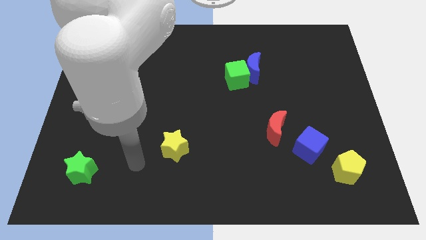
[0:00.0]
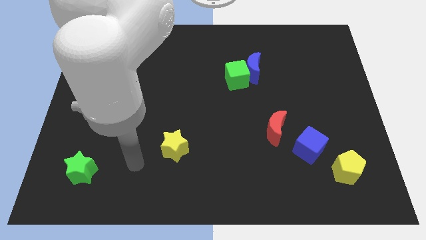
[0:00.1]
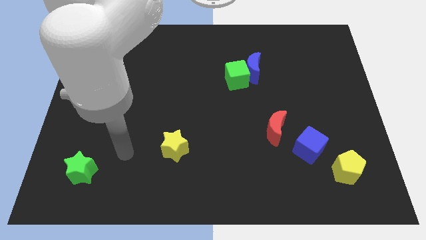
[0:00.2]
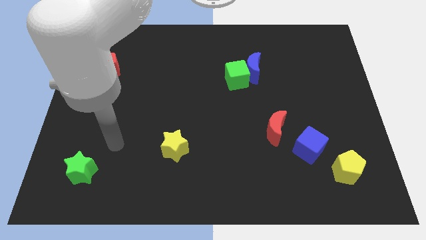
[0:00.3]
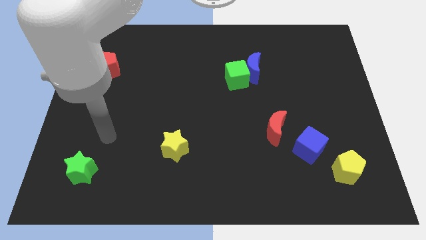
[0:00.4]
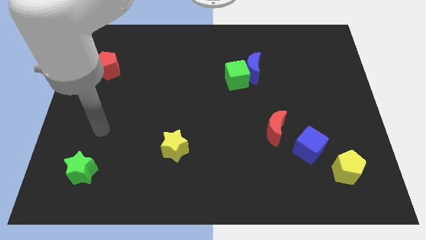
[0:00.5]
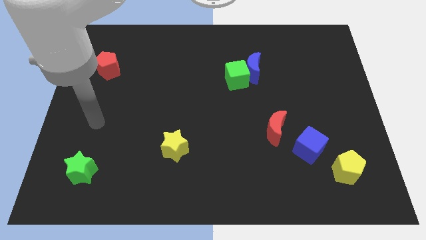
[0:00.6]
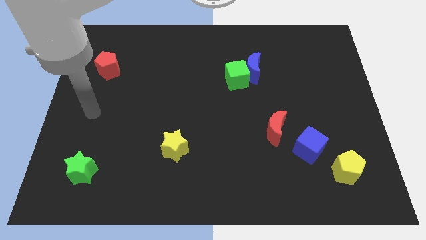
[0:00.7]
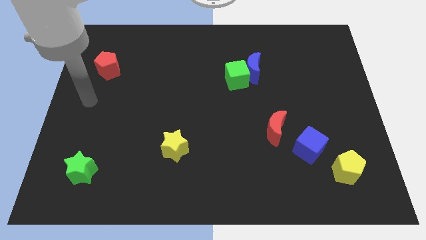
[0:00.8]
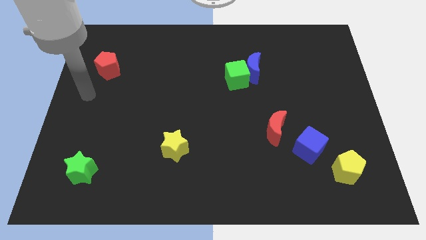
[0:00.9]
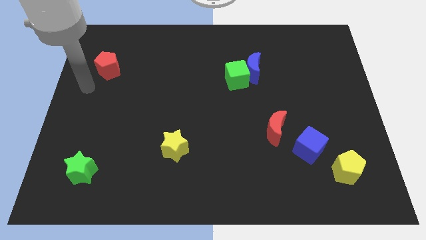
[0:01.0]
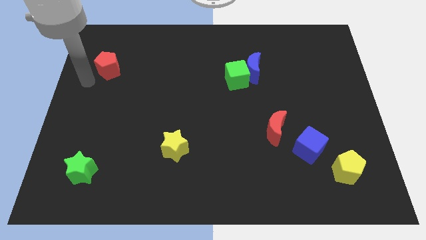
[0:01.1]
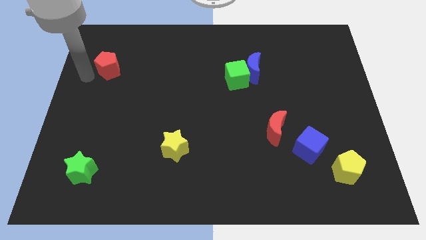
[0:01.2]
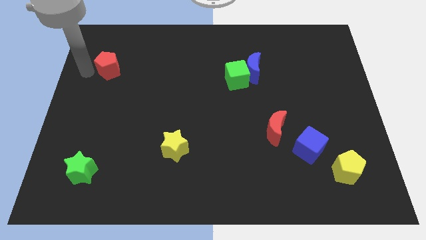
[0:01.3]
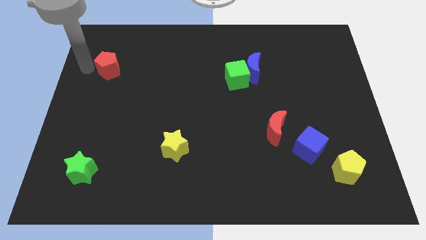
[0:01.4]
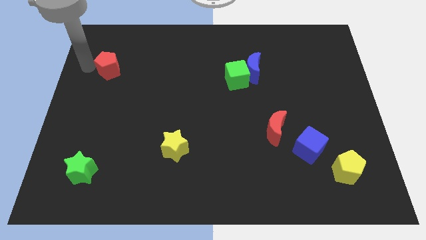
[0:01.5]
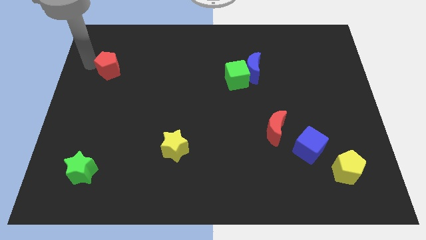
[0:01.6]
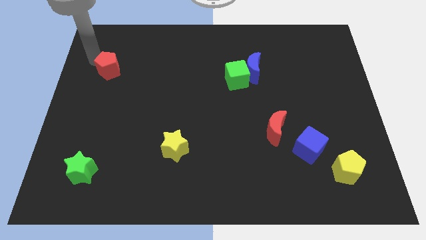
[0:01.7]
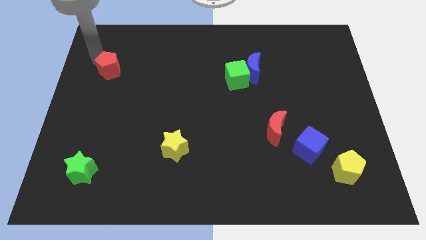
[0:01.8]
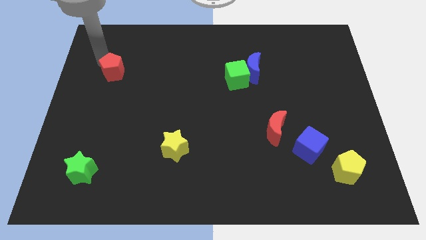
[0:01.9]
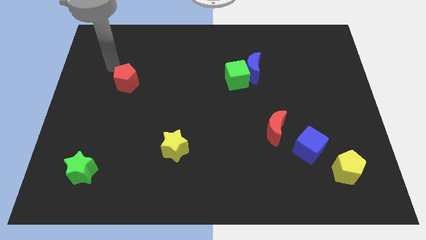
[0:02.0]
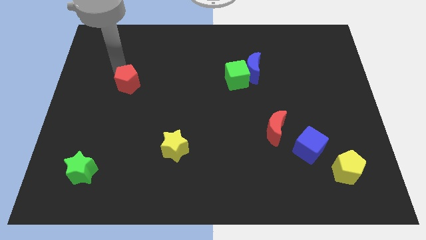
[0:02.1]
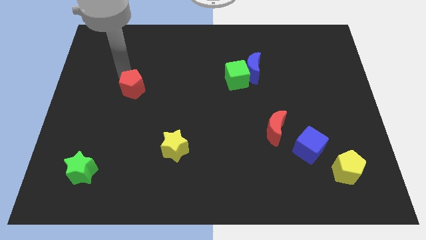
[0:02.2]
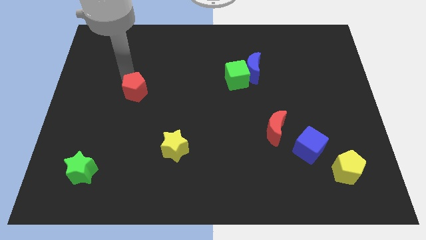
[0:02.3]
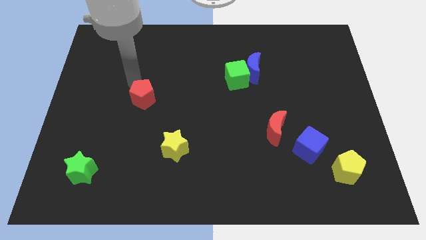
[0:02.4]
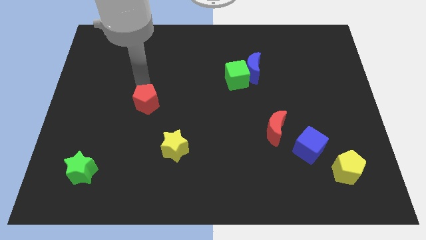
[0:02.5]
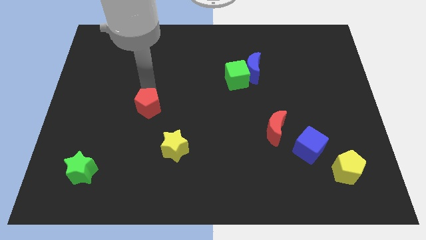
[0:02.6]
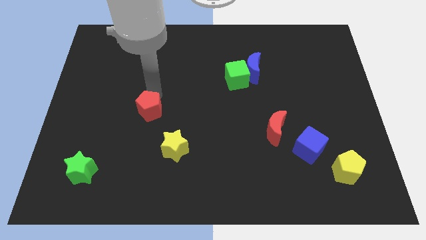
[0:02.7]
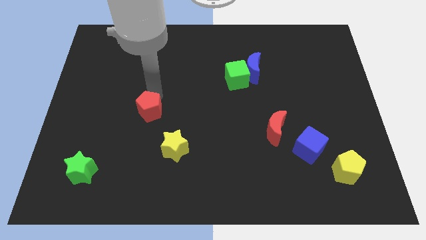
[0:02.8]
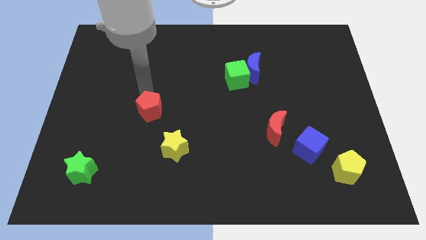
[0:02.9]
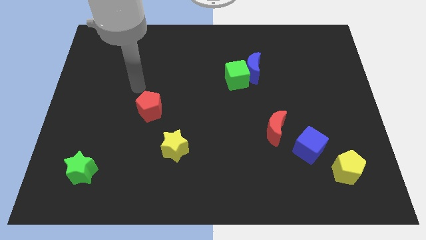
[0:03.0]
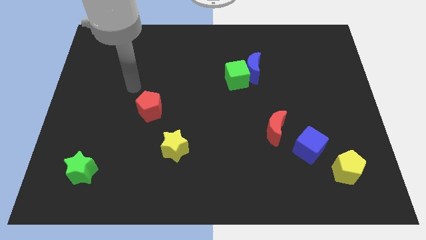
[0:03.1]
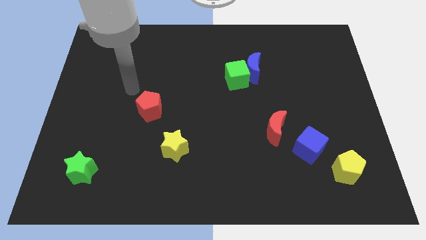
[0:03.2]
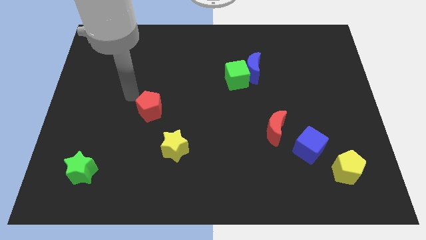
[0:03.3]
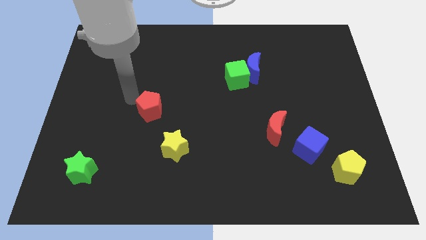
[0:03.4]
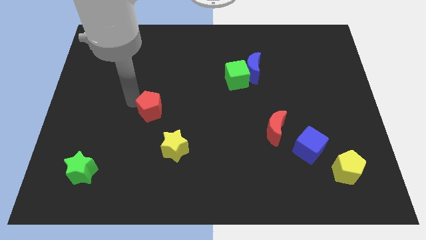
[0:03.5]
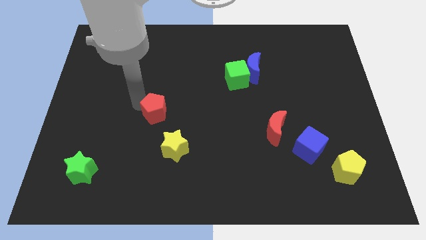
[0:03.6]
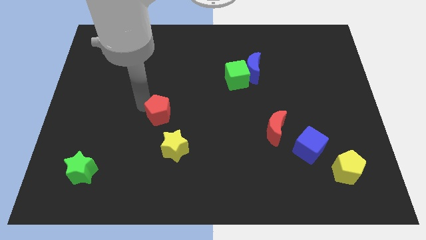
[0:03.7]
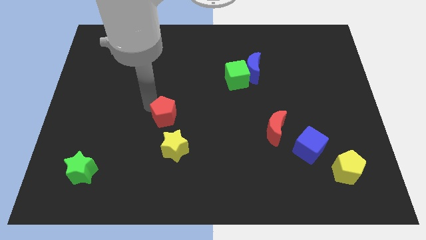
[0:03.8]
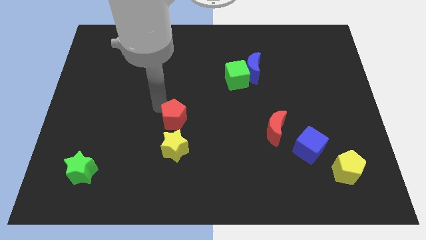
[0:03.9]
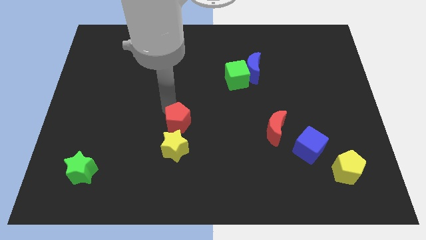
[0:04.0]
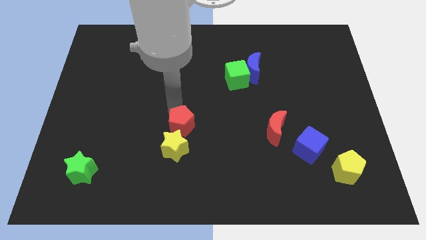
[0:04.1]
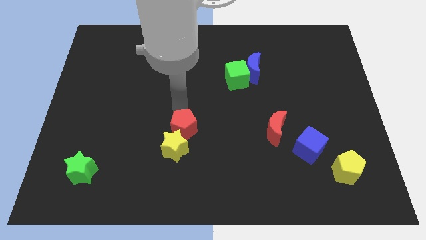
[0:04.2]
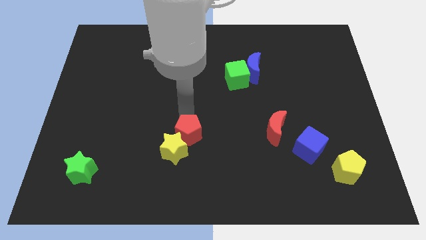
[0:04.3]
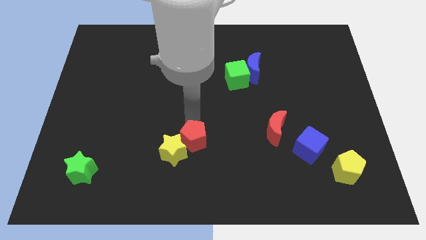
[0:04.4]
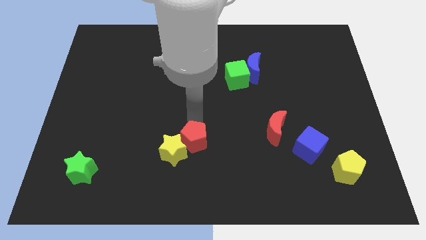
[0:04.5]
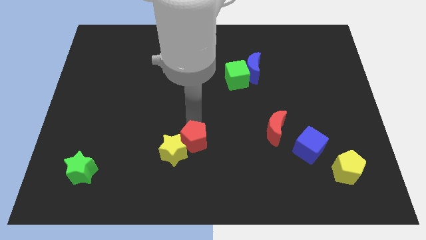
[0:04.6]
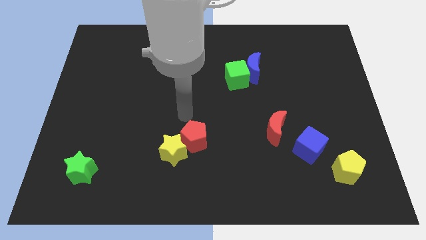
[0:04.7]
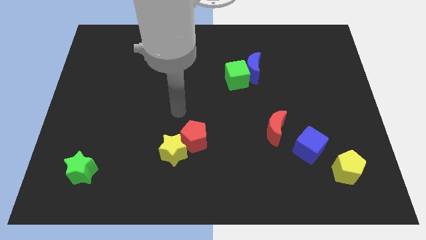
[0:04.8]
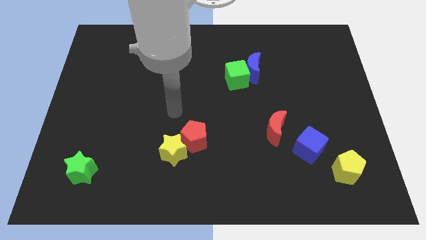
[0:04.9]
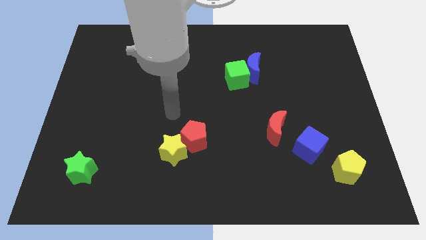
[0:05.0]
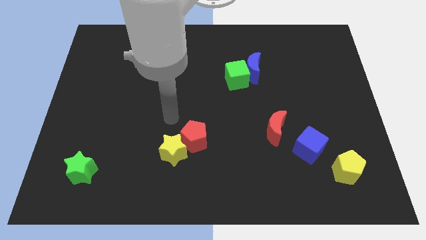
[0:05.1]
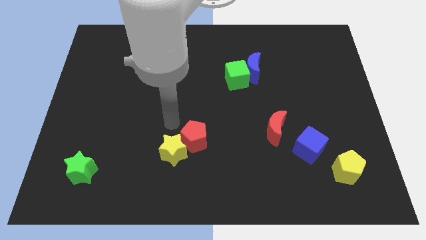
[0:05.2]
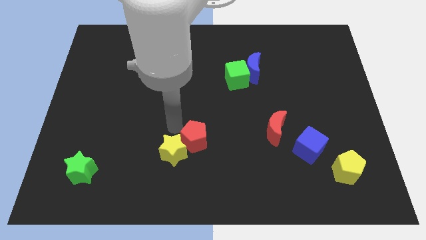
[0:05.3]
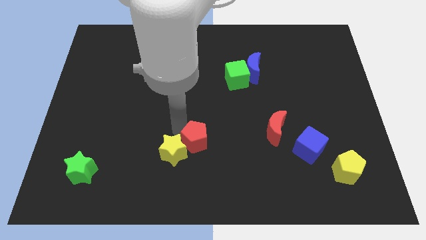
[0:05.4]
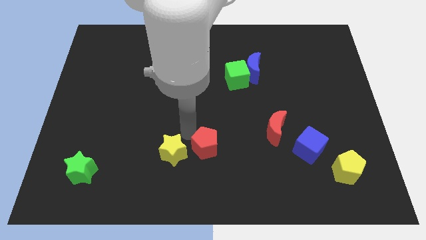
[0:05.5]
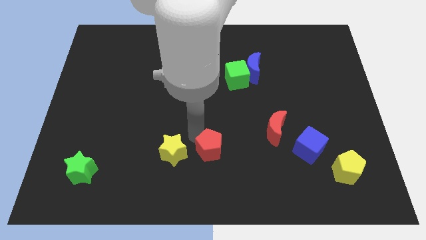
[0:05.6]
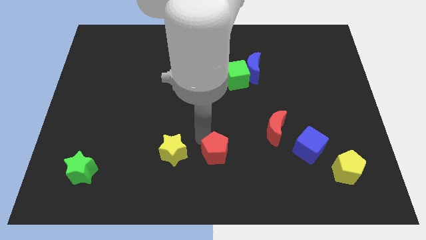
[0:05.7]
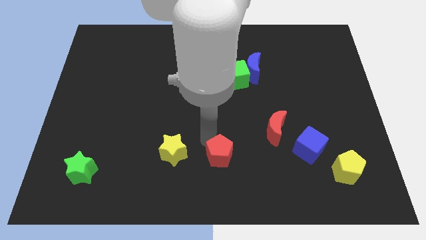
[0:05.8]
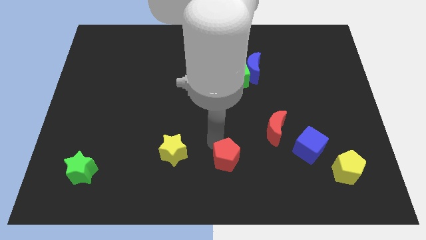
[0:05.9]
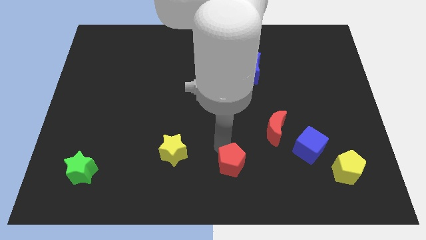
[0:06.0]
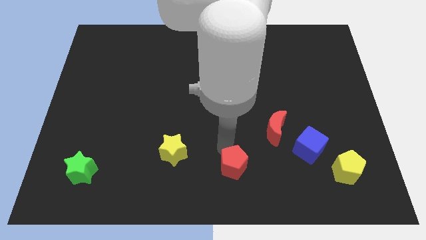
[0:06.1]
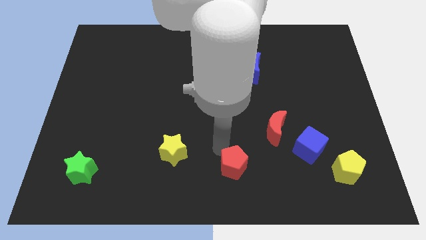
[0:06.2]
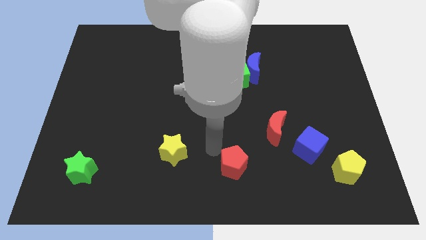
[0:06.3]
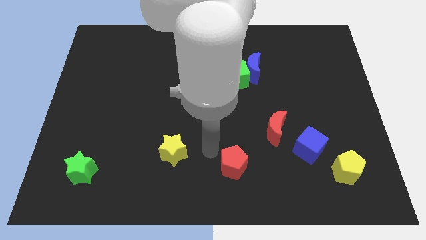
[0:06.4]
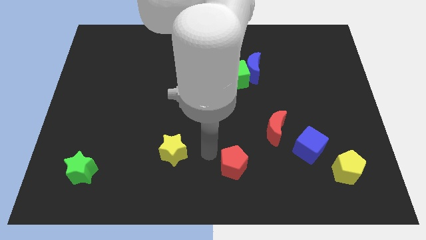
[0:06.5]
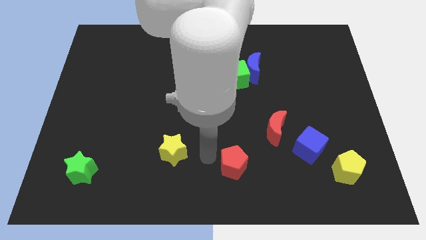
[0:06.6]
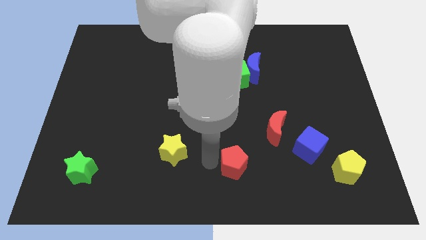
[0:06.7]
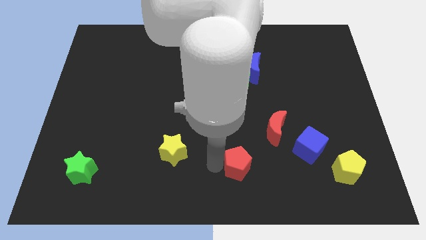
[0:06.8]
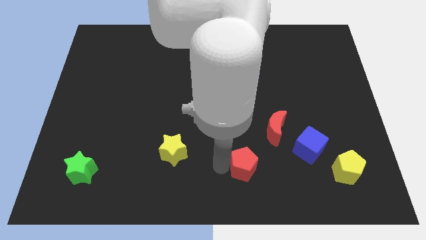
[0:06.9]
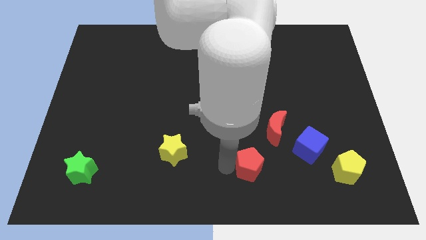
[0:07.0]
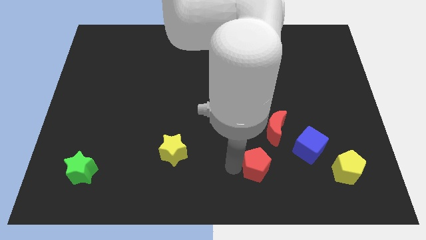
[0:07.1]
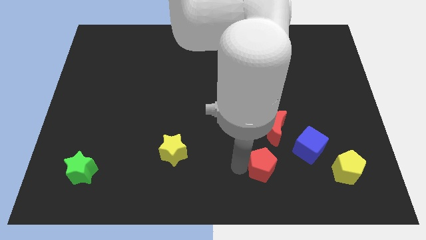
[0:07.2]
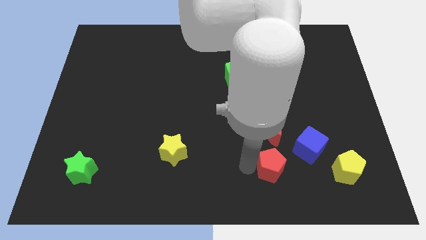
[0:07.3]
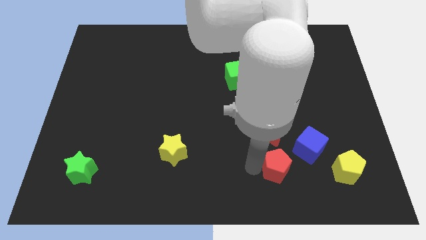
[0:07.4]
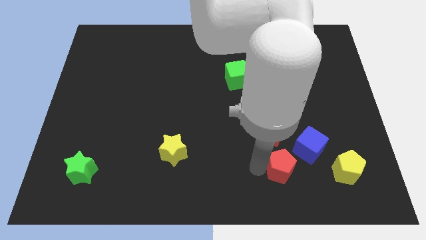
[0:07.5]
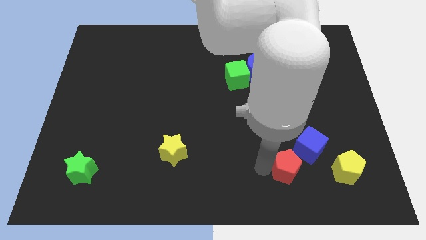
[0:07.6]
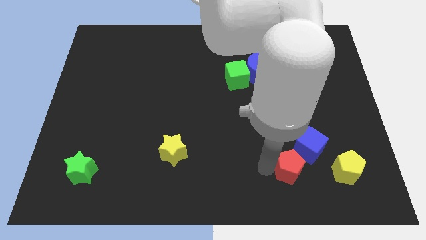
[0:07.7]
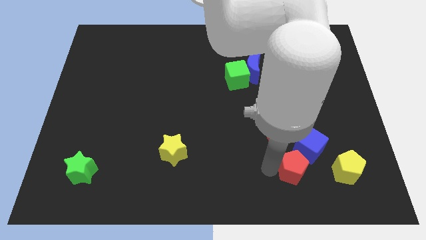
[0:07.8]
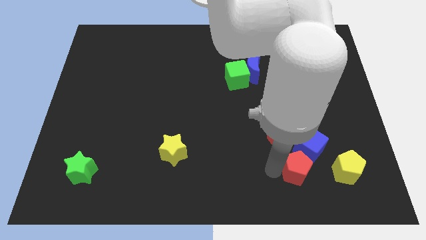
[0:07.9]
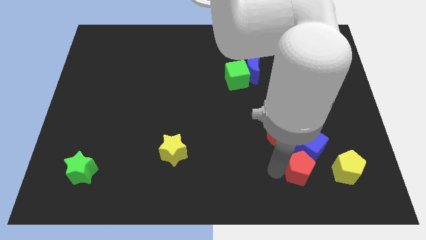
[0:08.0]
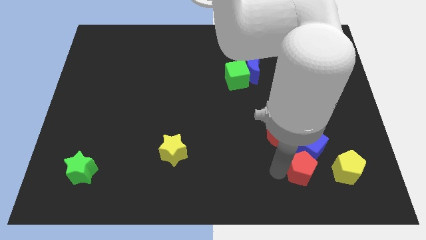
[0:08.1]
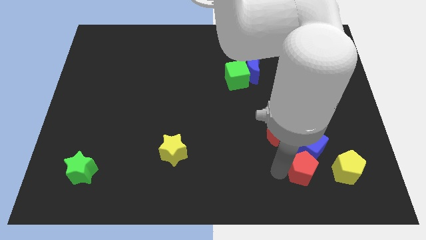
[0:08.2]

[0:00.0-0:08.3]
slide the red pentagon towards the blue cube

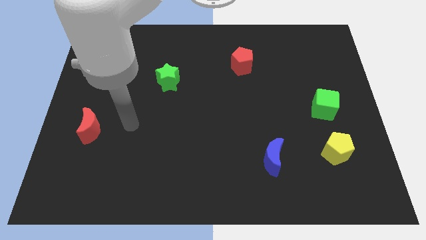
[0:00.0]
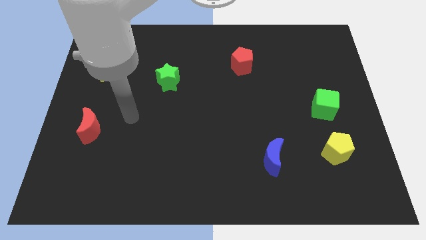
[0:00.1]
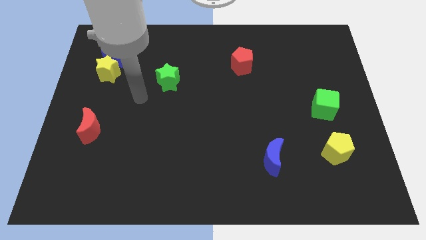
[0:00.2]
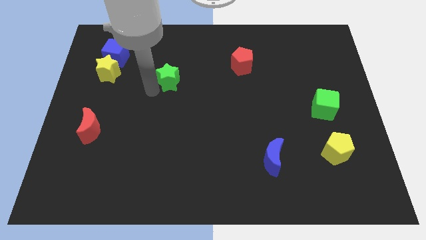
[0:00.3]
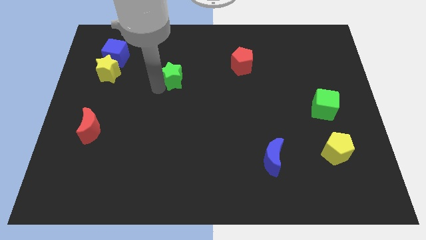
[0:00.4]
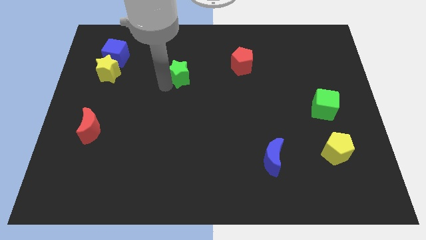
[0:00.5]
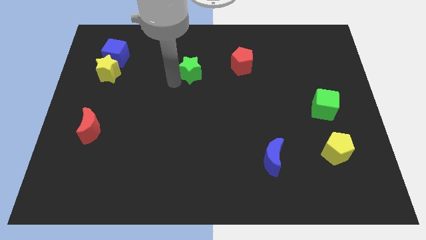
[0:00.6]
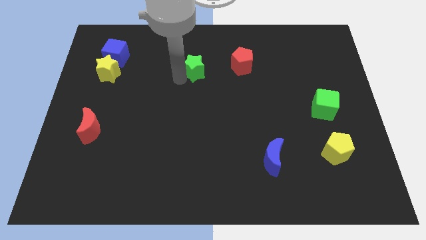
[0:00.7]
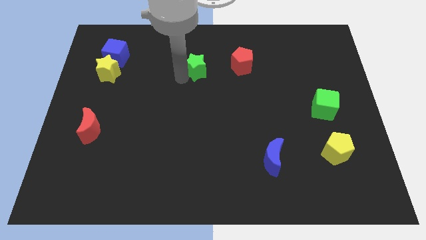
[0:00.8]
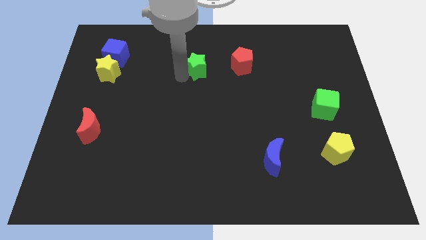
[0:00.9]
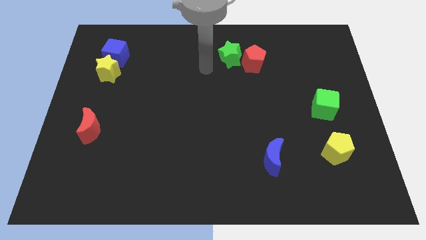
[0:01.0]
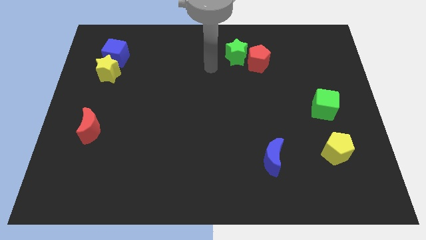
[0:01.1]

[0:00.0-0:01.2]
push the green star next to the red pentagon
